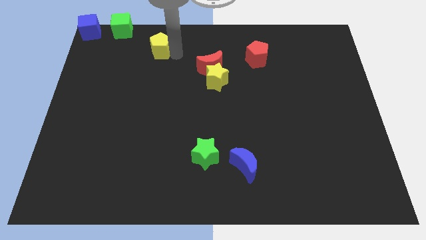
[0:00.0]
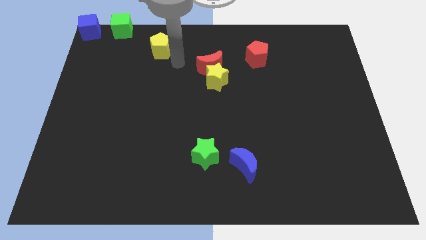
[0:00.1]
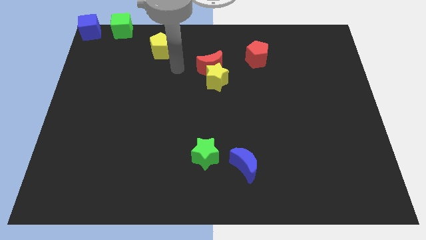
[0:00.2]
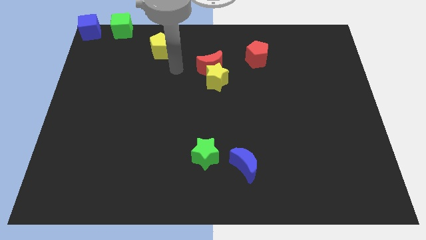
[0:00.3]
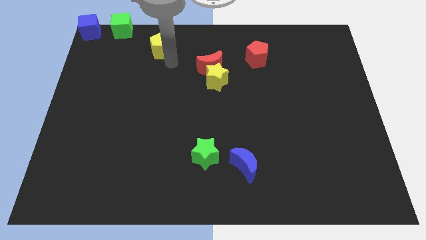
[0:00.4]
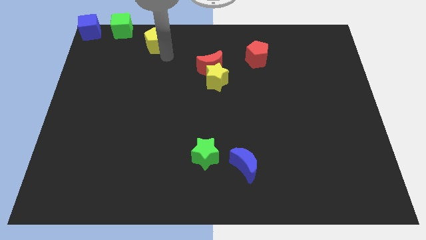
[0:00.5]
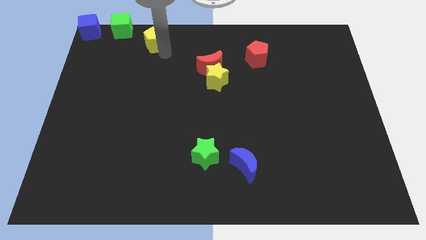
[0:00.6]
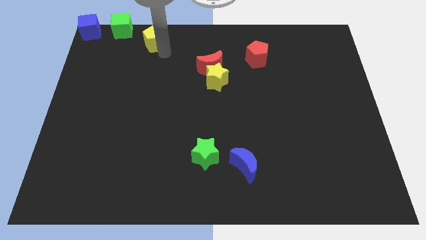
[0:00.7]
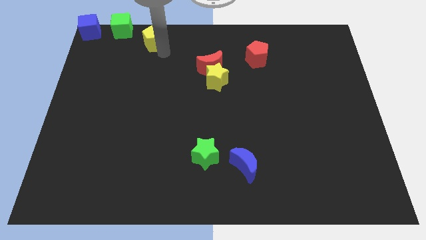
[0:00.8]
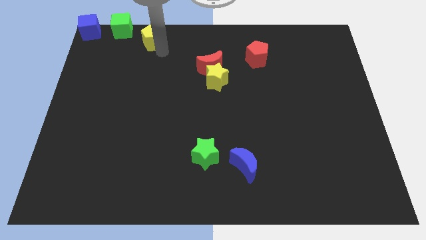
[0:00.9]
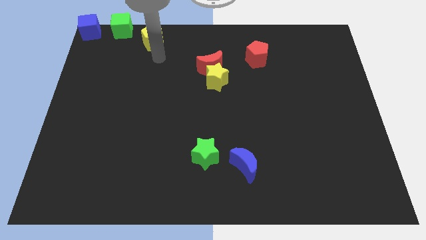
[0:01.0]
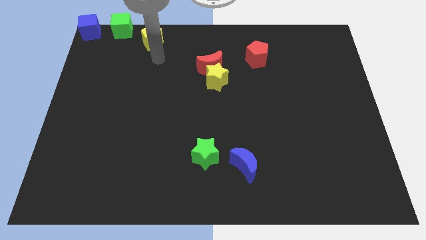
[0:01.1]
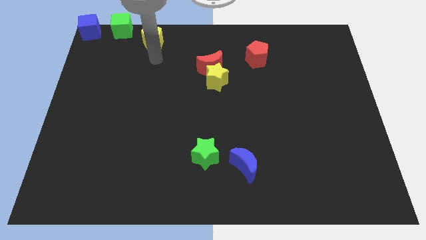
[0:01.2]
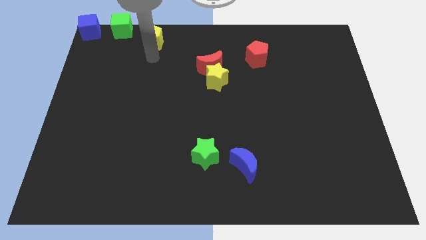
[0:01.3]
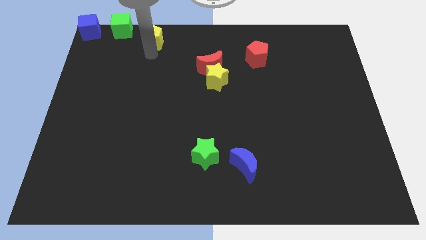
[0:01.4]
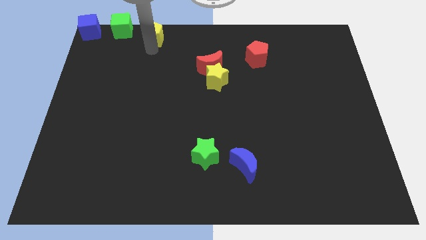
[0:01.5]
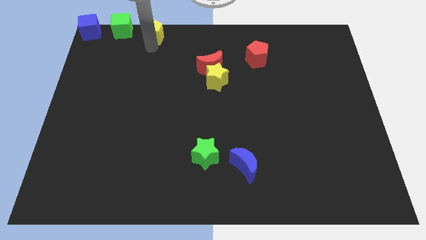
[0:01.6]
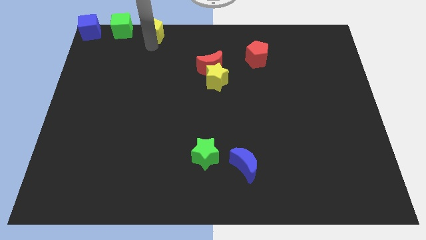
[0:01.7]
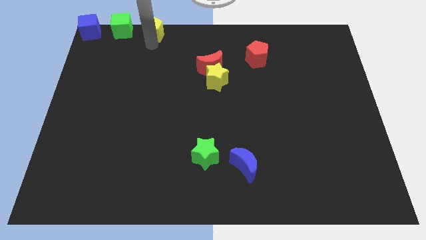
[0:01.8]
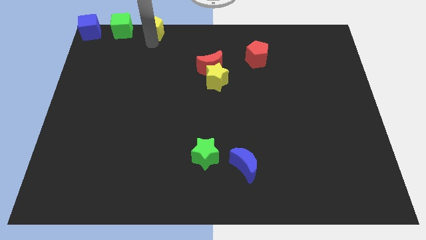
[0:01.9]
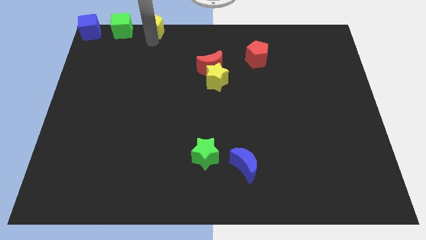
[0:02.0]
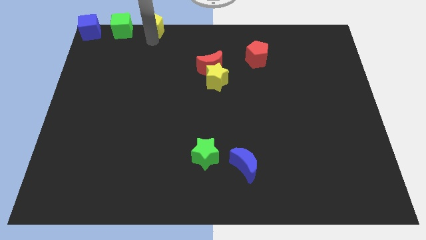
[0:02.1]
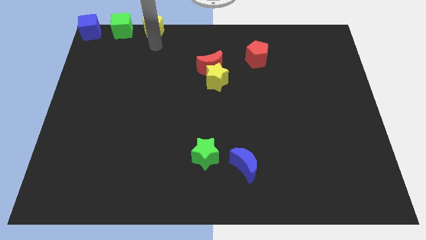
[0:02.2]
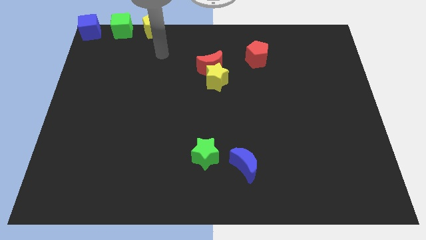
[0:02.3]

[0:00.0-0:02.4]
put the yellow pentagon right to the green cube

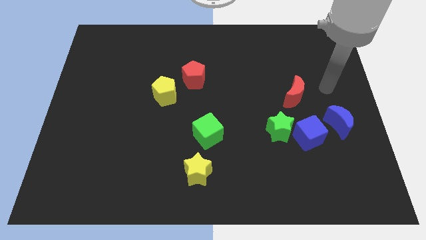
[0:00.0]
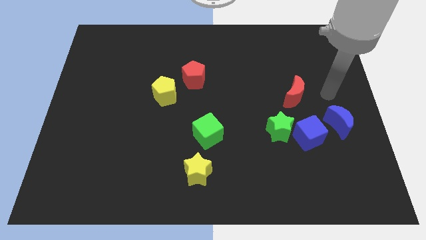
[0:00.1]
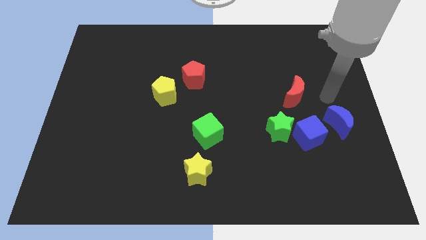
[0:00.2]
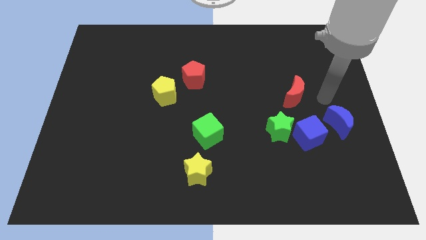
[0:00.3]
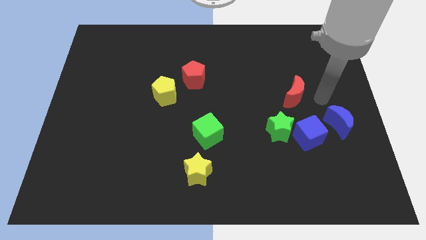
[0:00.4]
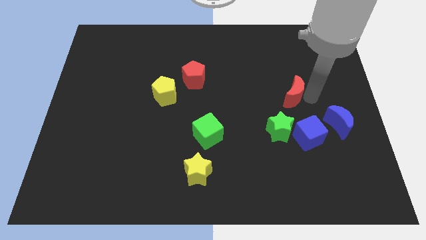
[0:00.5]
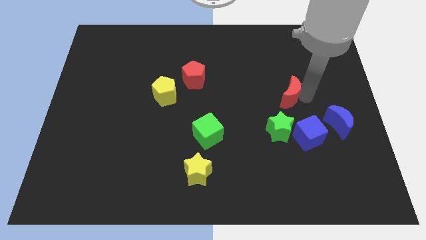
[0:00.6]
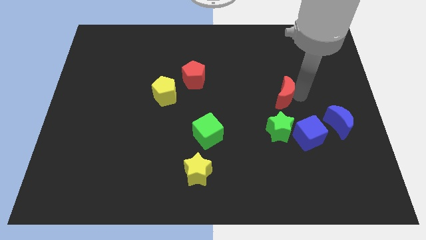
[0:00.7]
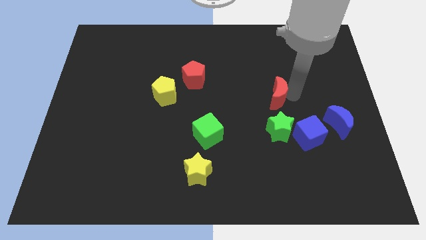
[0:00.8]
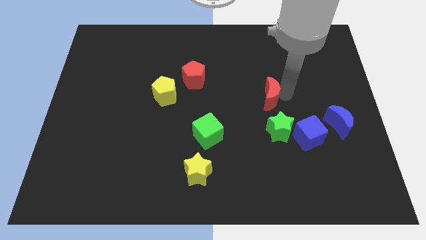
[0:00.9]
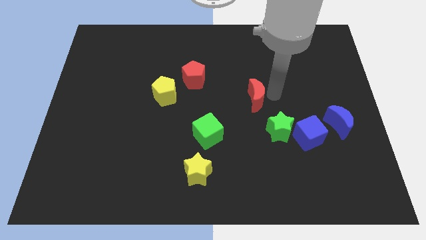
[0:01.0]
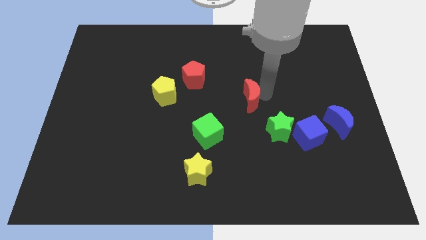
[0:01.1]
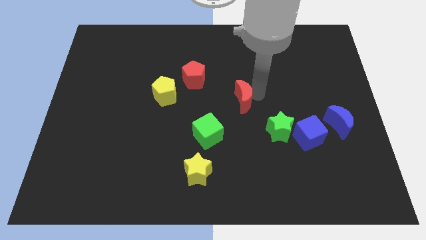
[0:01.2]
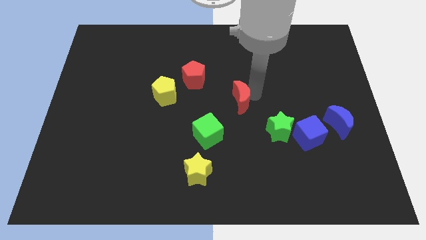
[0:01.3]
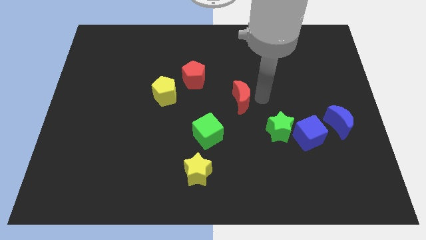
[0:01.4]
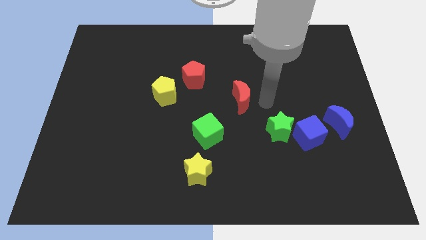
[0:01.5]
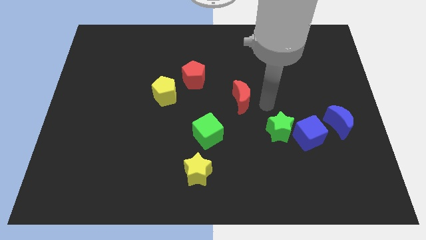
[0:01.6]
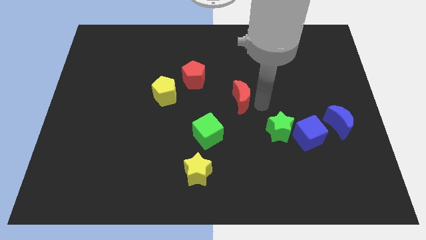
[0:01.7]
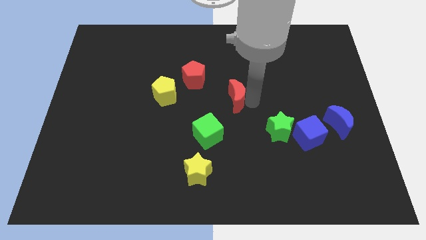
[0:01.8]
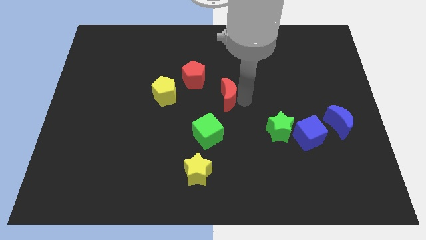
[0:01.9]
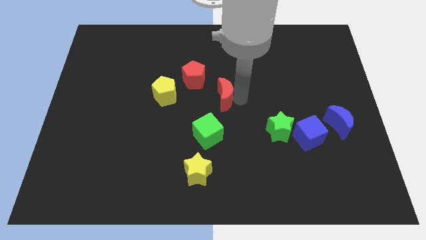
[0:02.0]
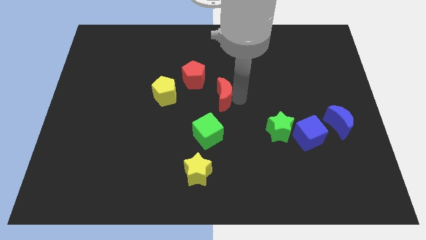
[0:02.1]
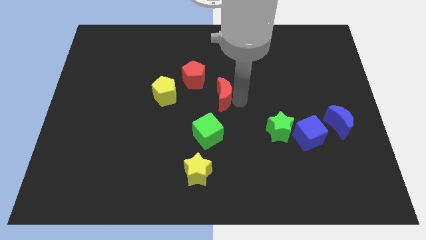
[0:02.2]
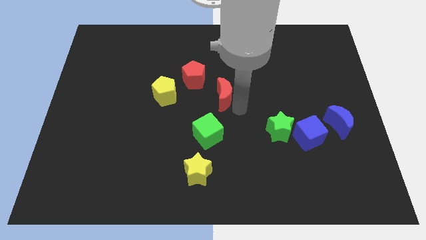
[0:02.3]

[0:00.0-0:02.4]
place red moon to the center

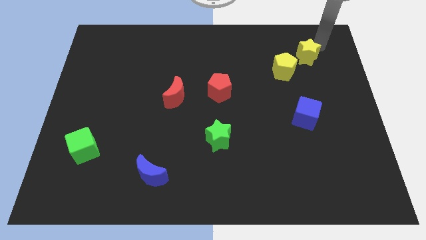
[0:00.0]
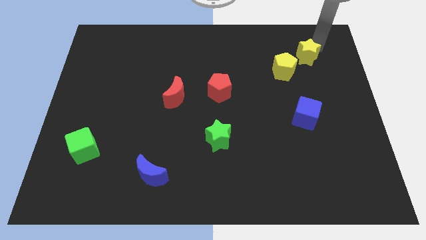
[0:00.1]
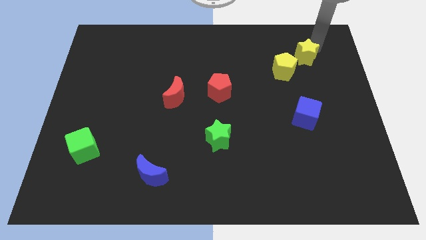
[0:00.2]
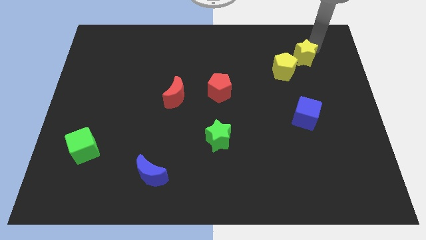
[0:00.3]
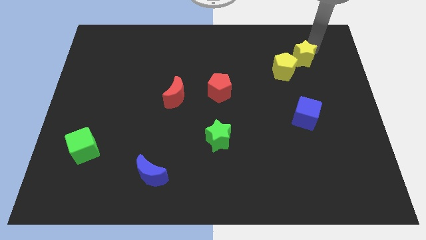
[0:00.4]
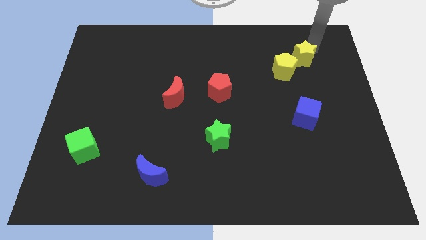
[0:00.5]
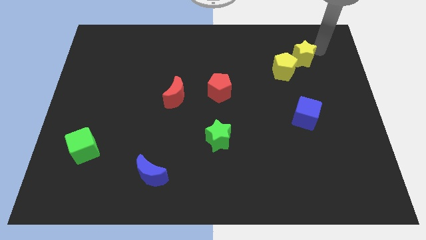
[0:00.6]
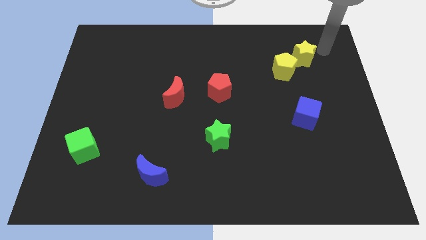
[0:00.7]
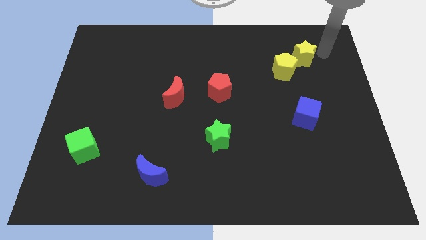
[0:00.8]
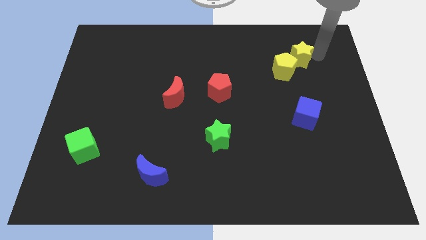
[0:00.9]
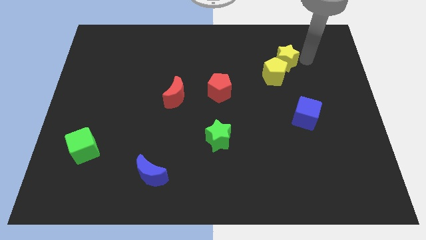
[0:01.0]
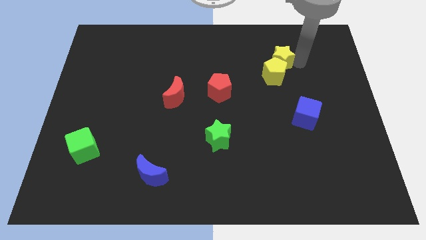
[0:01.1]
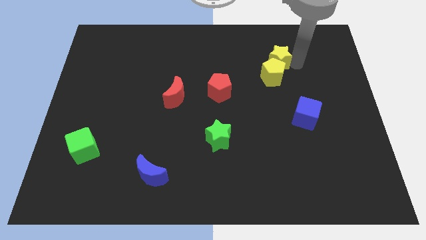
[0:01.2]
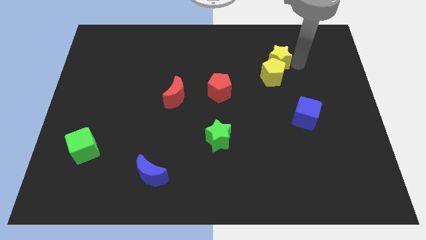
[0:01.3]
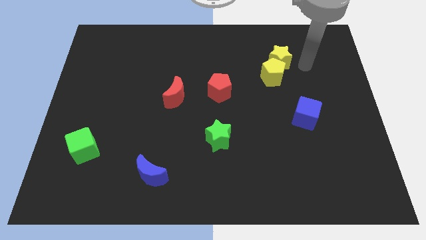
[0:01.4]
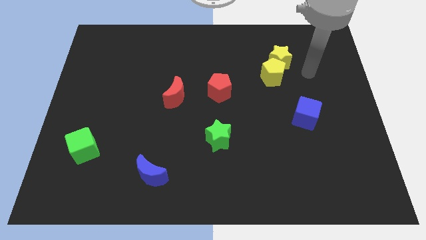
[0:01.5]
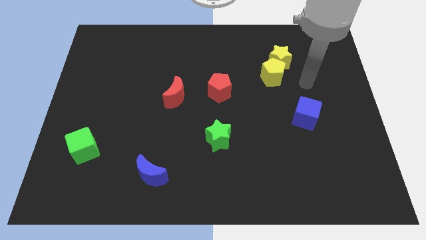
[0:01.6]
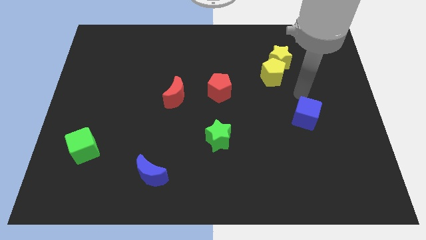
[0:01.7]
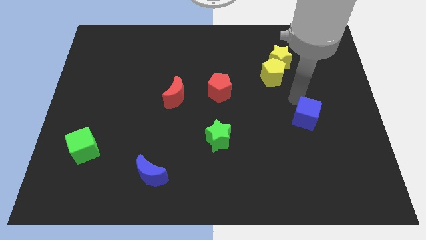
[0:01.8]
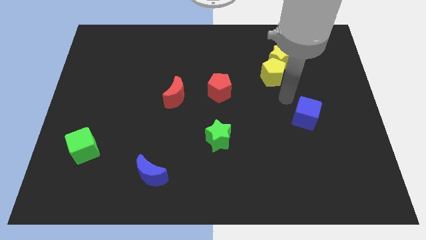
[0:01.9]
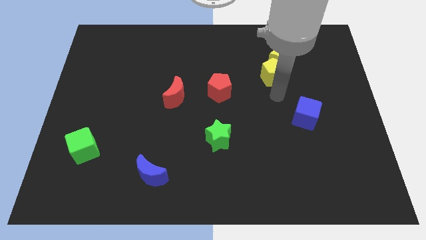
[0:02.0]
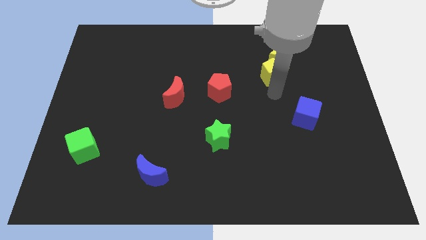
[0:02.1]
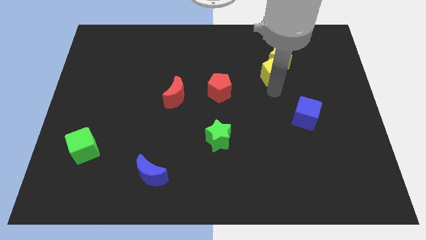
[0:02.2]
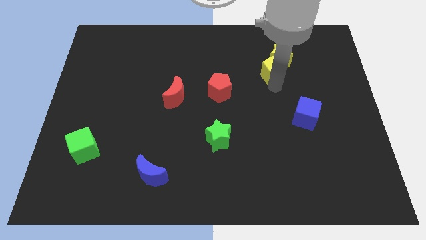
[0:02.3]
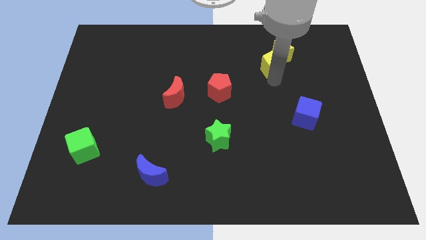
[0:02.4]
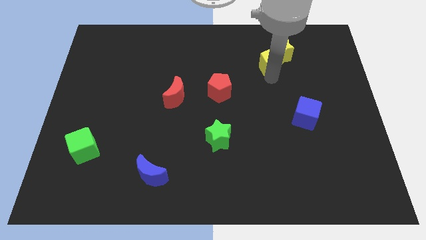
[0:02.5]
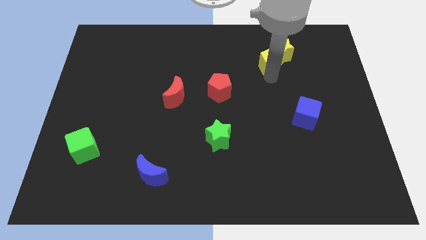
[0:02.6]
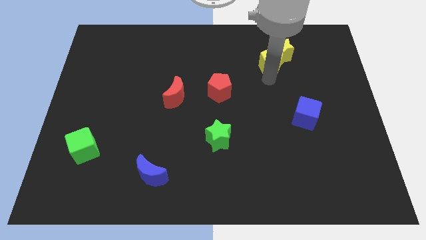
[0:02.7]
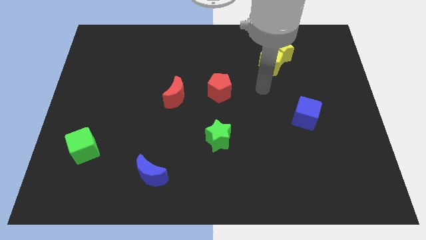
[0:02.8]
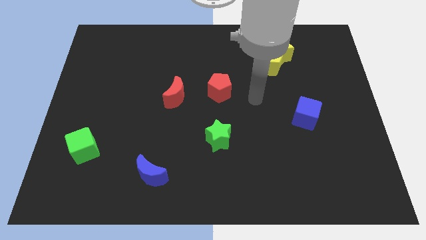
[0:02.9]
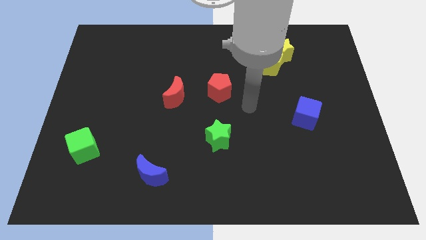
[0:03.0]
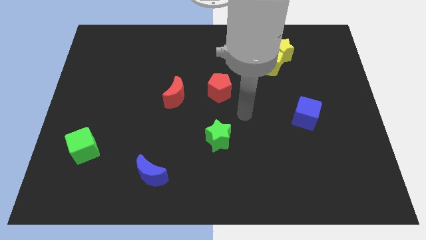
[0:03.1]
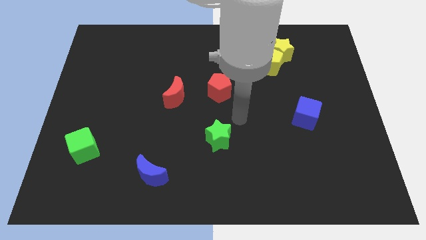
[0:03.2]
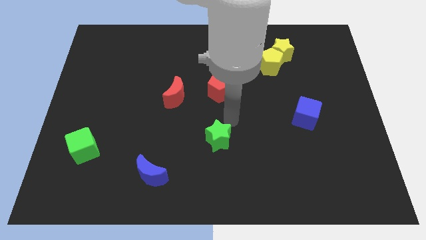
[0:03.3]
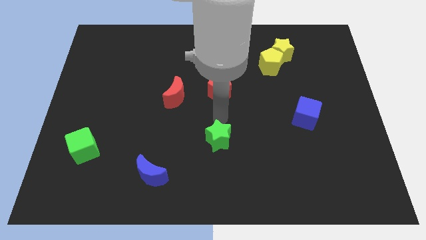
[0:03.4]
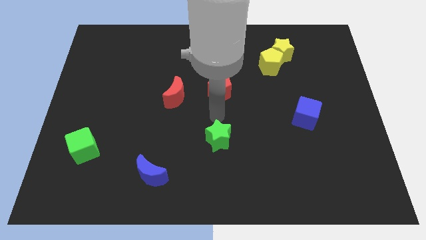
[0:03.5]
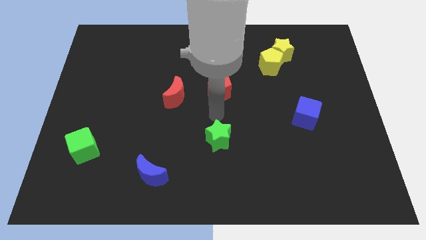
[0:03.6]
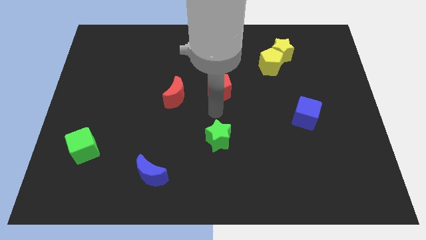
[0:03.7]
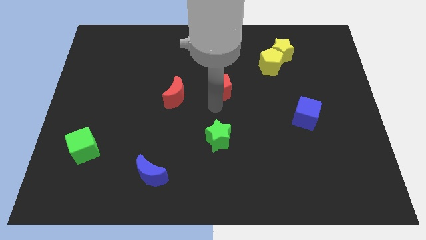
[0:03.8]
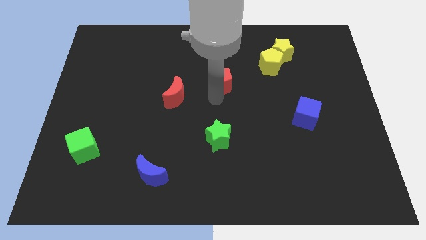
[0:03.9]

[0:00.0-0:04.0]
make the yellow pentagon and yellow star together

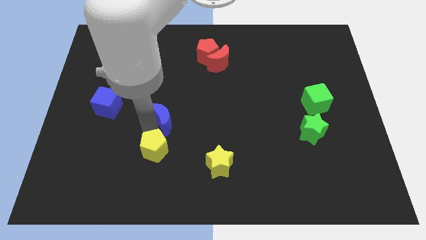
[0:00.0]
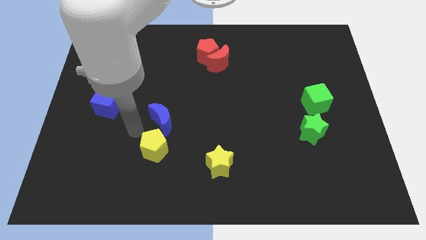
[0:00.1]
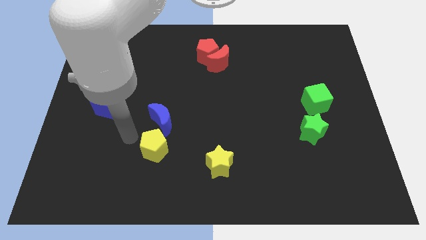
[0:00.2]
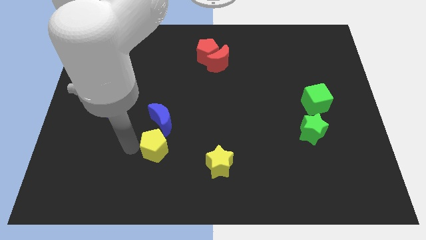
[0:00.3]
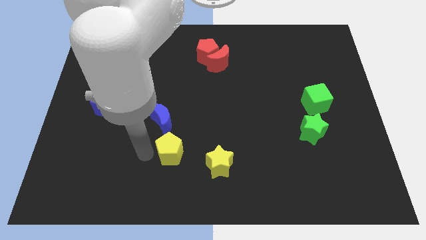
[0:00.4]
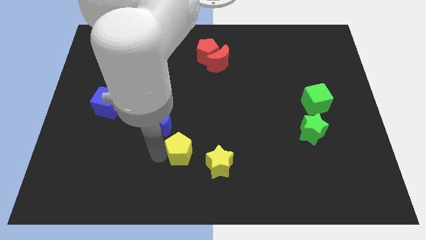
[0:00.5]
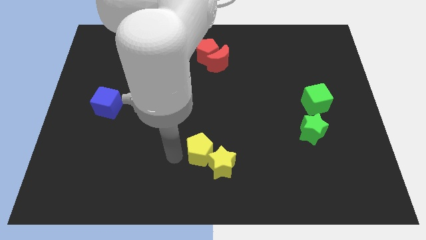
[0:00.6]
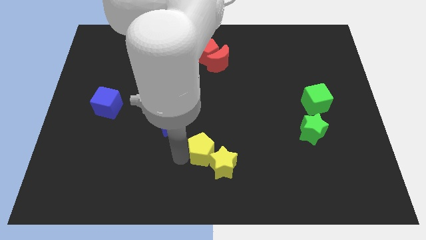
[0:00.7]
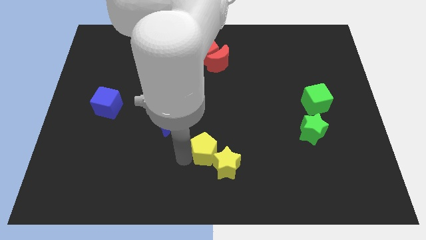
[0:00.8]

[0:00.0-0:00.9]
push the yellow pentagon into the yellow star
